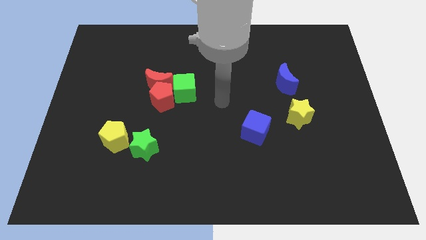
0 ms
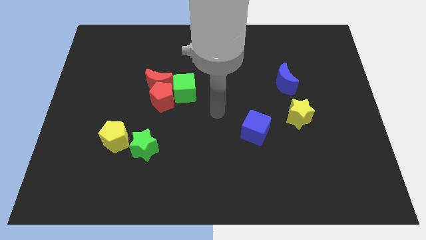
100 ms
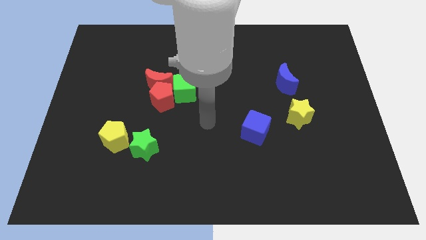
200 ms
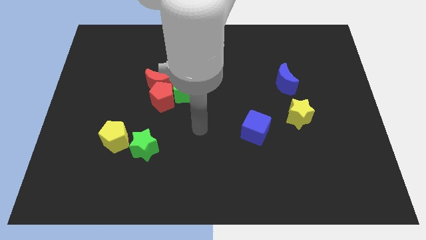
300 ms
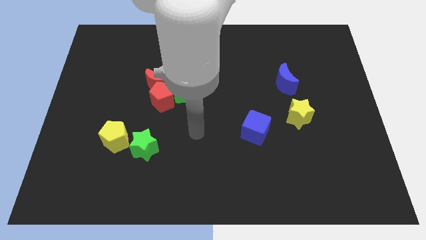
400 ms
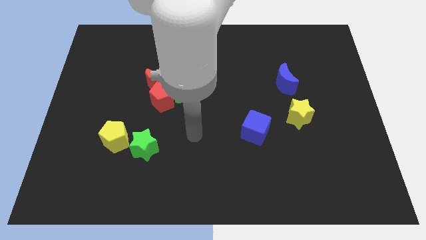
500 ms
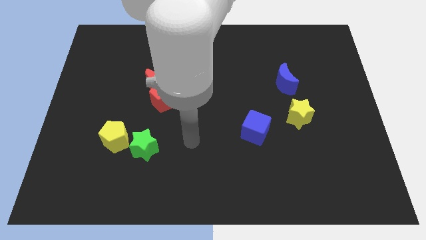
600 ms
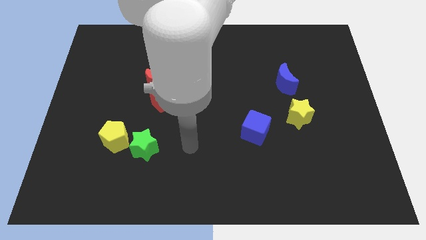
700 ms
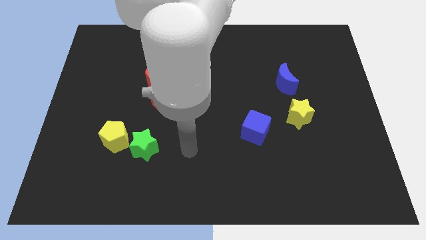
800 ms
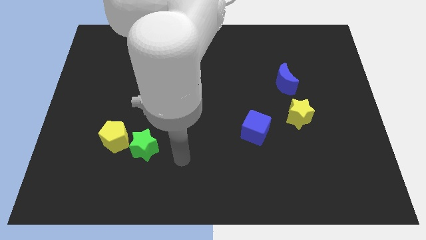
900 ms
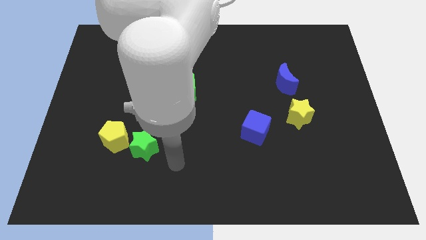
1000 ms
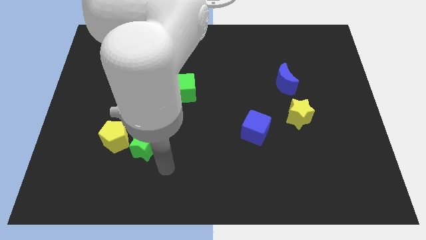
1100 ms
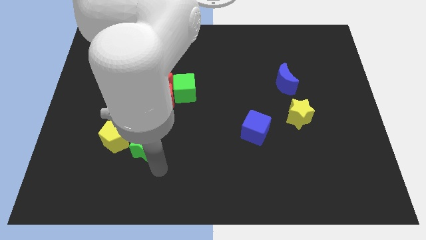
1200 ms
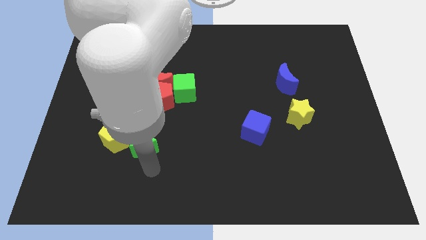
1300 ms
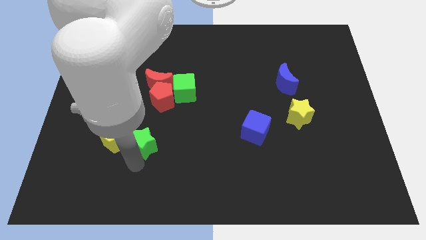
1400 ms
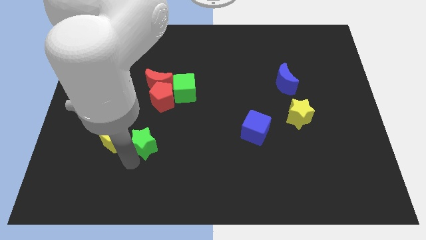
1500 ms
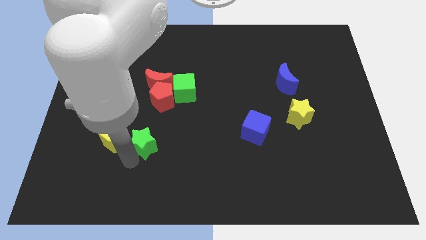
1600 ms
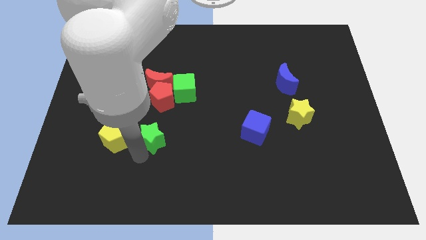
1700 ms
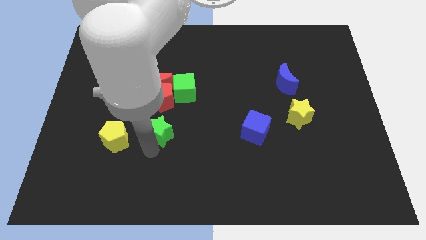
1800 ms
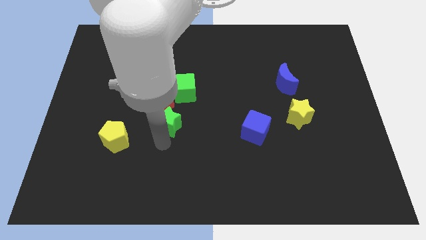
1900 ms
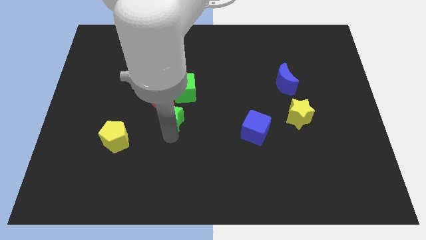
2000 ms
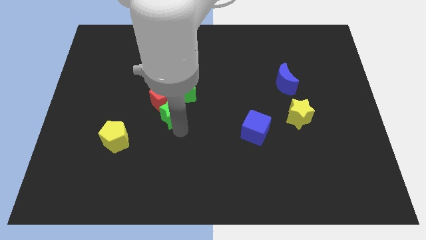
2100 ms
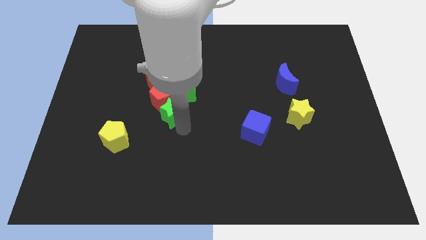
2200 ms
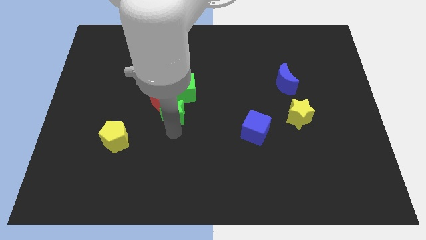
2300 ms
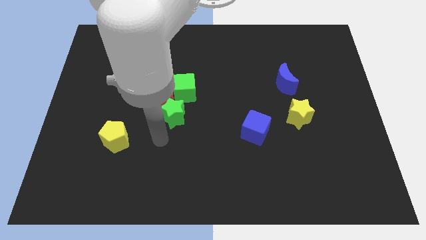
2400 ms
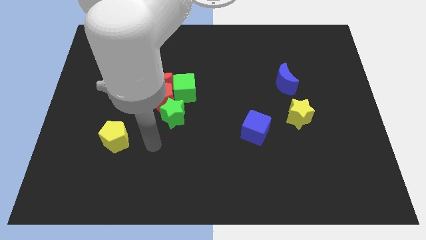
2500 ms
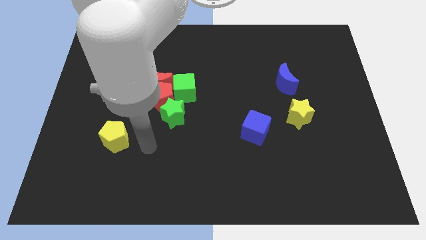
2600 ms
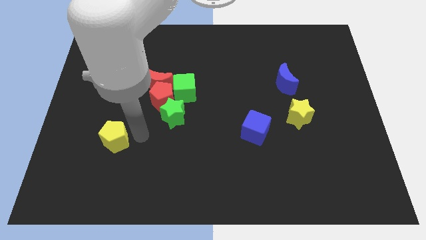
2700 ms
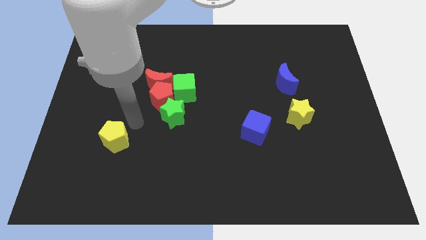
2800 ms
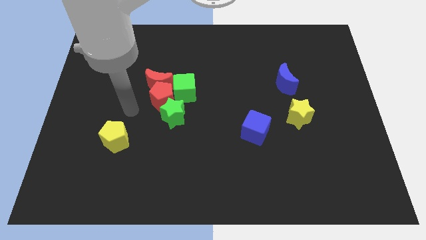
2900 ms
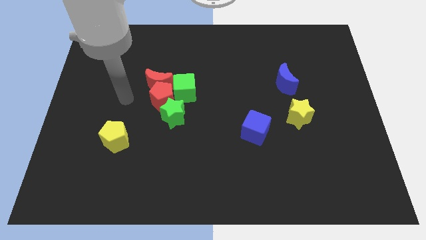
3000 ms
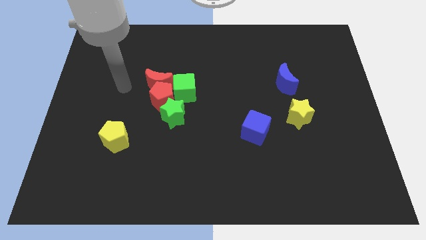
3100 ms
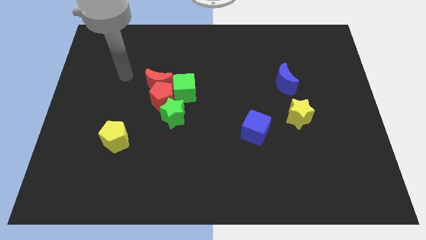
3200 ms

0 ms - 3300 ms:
push the green star into the group of blocks

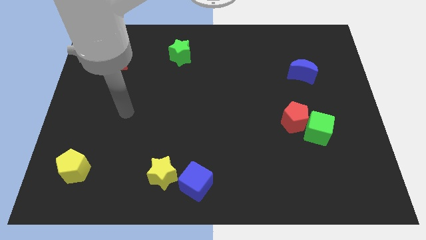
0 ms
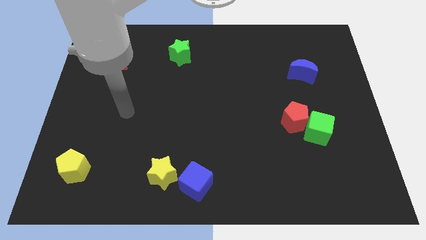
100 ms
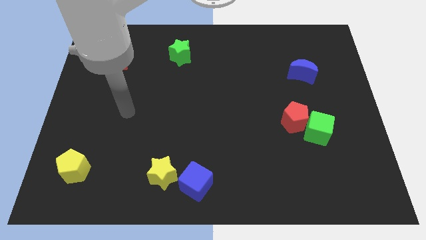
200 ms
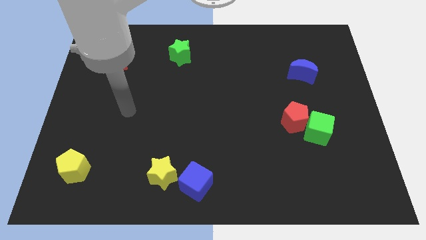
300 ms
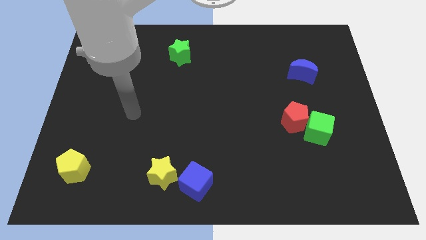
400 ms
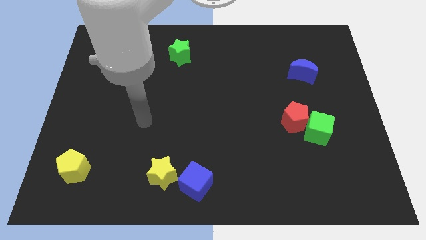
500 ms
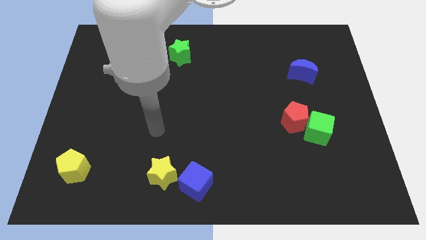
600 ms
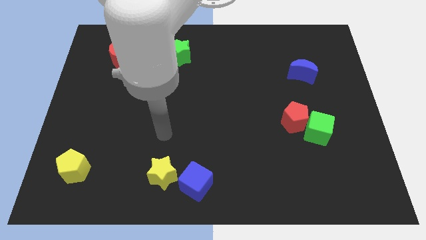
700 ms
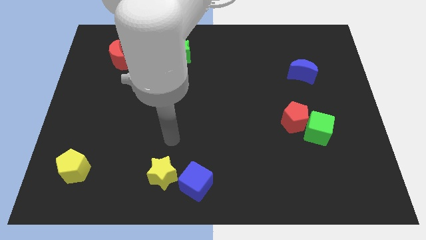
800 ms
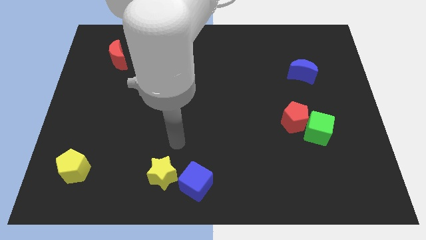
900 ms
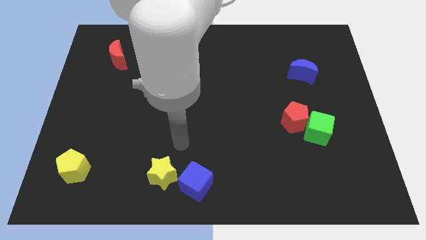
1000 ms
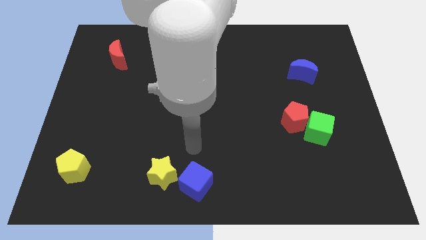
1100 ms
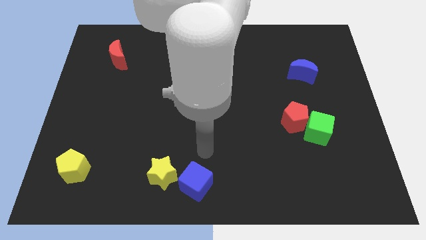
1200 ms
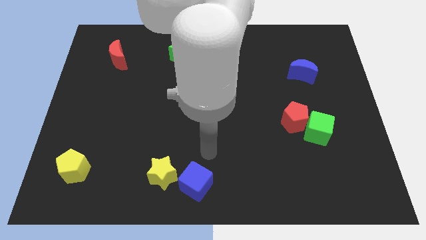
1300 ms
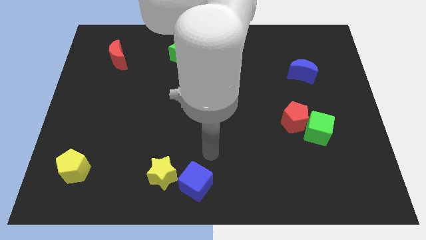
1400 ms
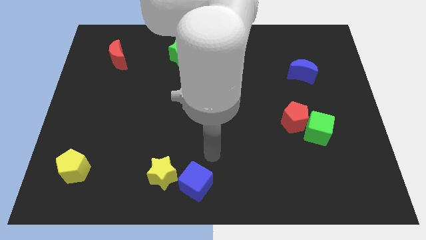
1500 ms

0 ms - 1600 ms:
place your arm at the top right side of the blue cube

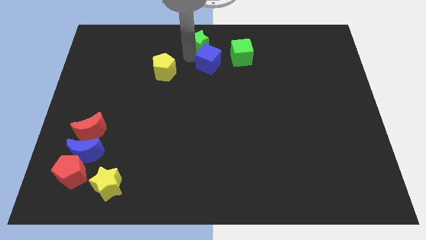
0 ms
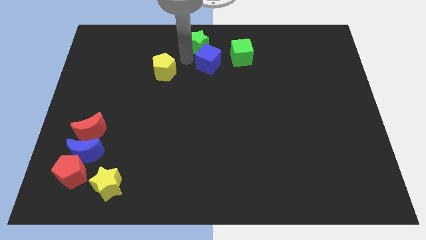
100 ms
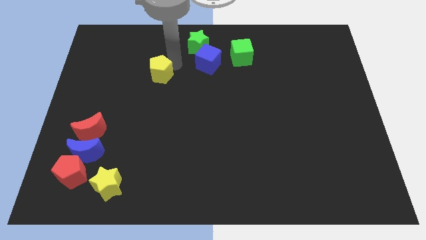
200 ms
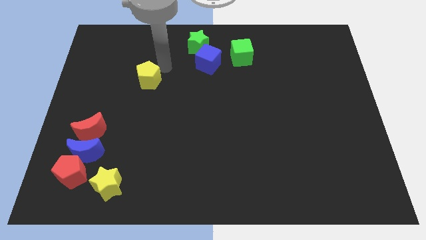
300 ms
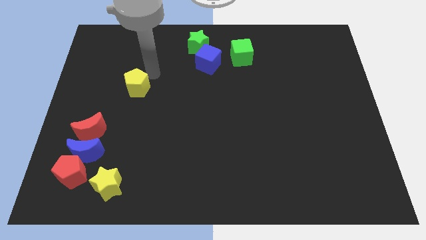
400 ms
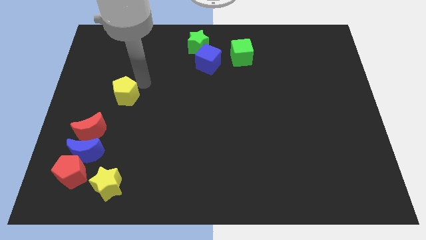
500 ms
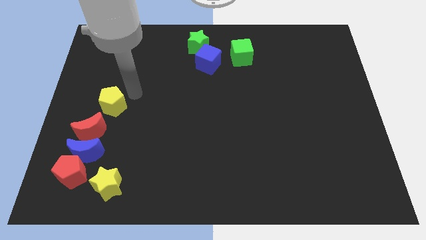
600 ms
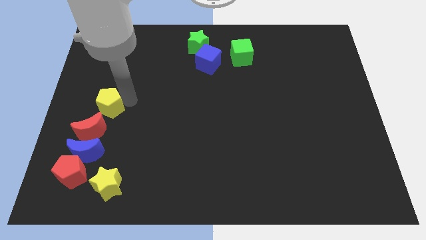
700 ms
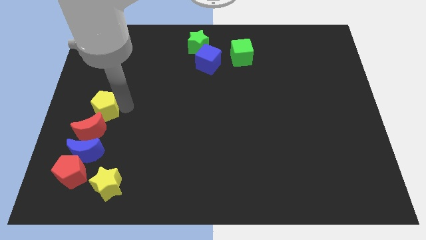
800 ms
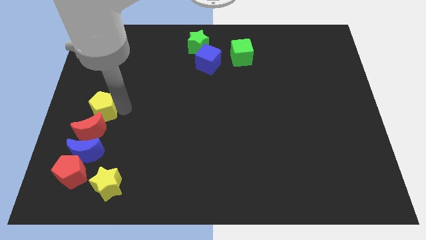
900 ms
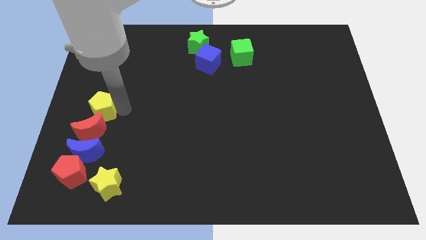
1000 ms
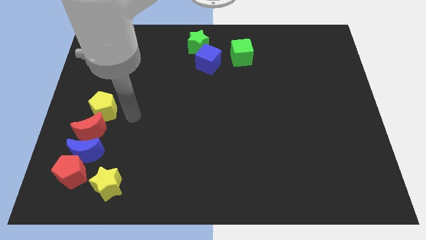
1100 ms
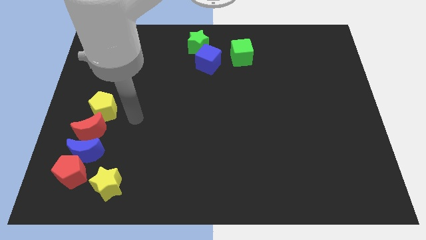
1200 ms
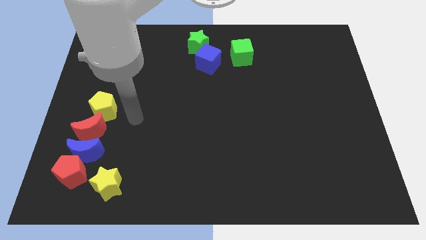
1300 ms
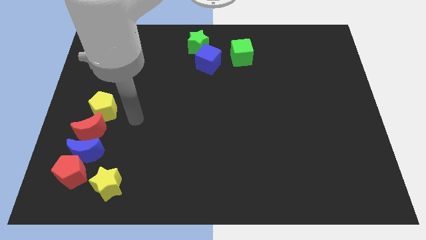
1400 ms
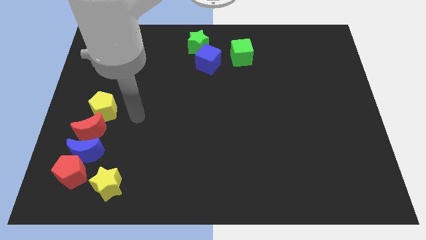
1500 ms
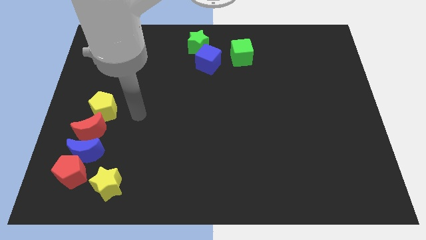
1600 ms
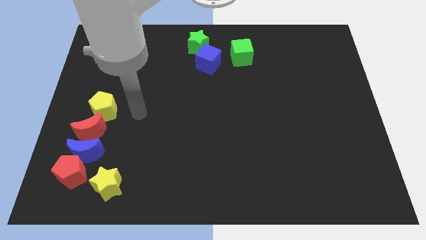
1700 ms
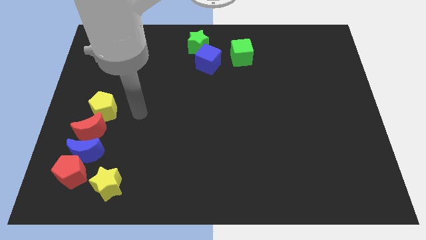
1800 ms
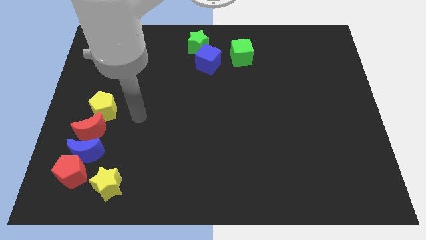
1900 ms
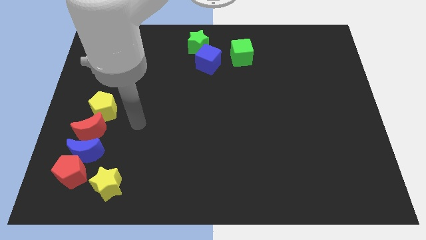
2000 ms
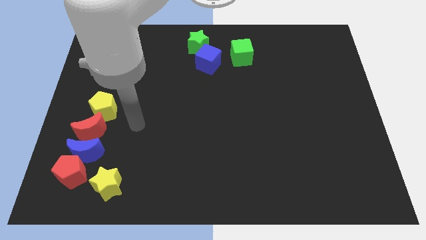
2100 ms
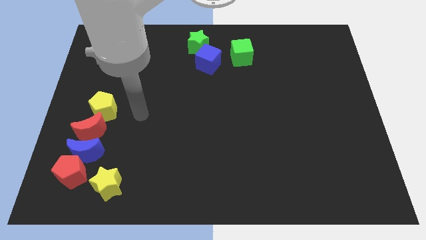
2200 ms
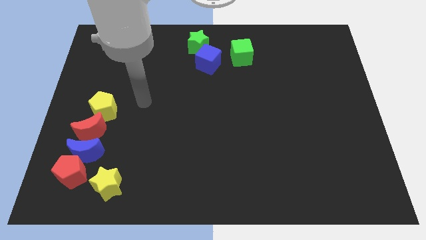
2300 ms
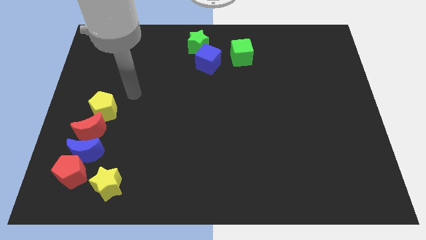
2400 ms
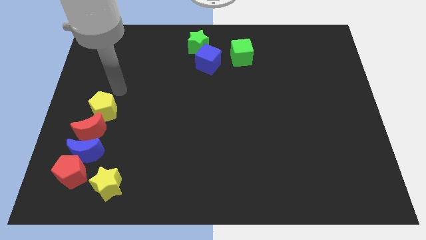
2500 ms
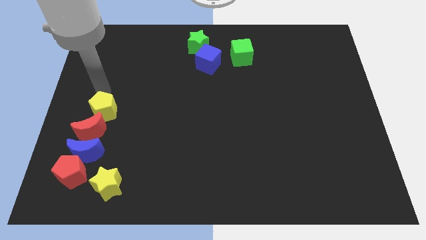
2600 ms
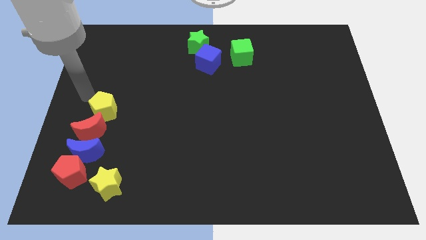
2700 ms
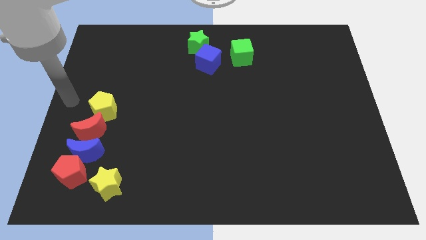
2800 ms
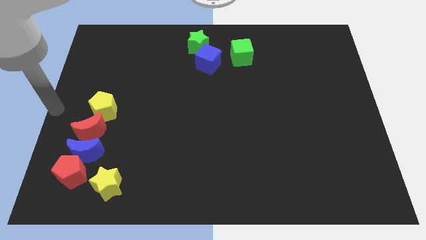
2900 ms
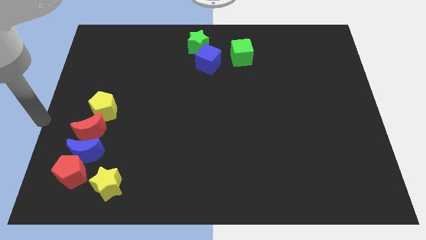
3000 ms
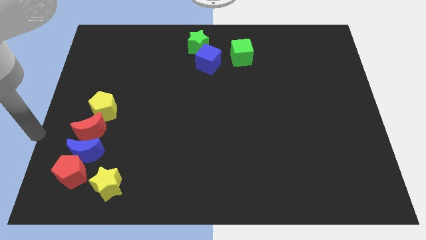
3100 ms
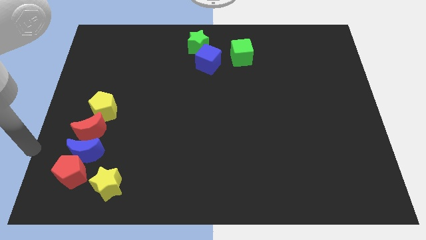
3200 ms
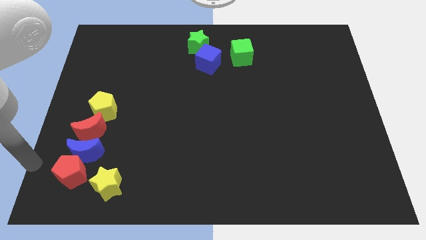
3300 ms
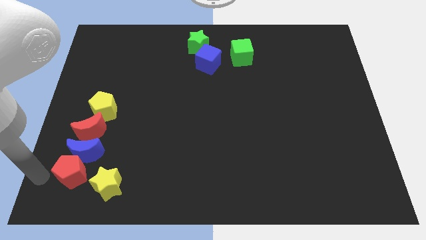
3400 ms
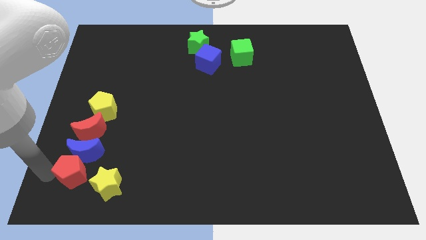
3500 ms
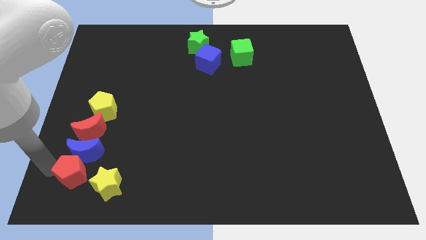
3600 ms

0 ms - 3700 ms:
place the yellow pentagon at the top of red moon

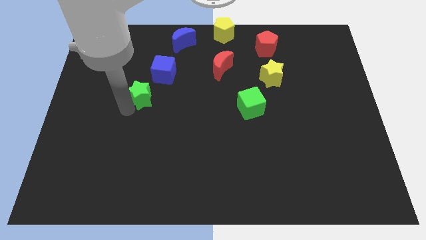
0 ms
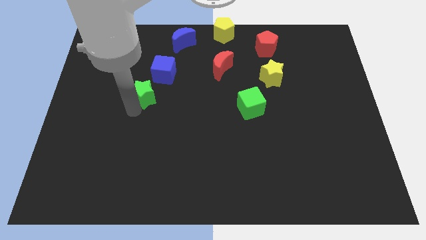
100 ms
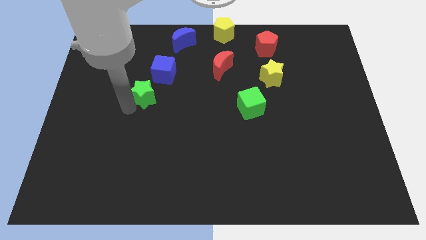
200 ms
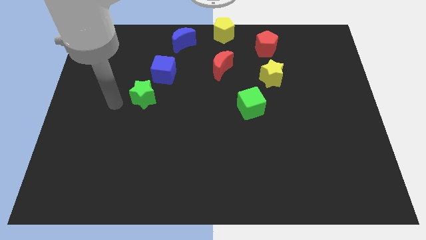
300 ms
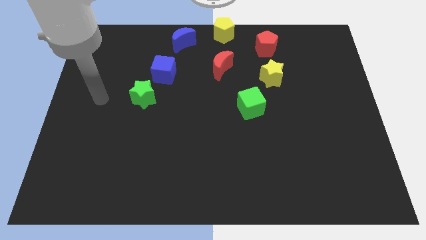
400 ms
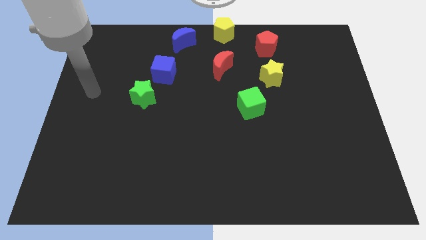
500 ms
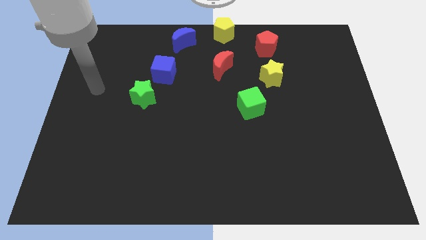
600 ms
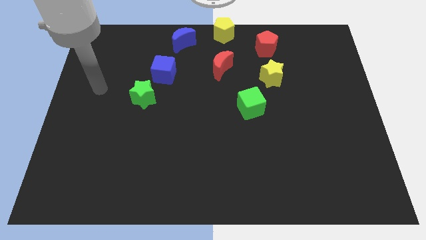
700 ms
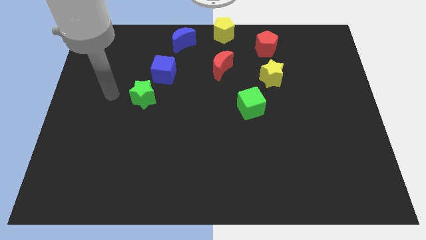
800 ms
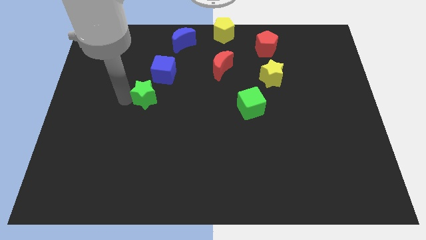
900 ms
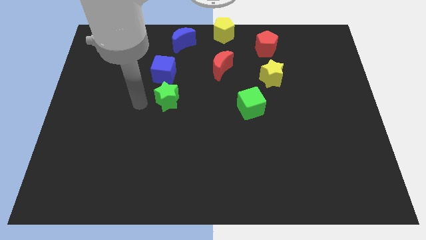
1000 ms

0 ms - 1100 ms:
move the green star below the blue cube
